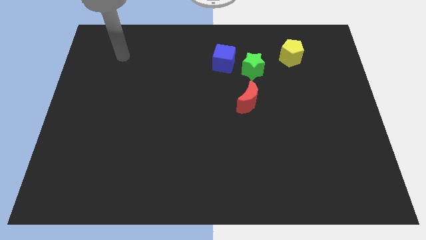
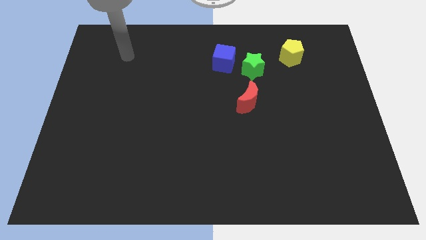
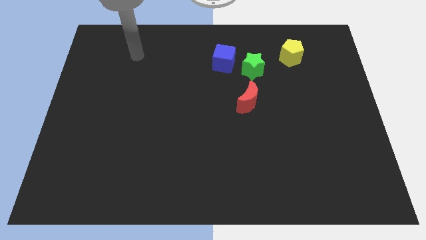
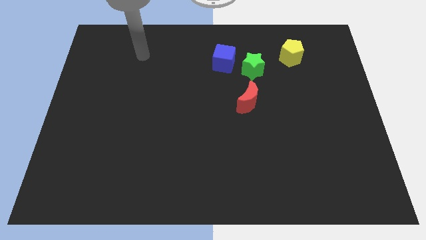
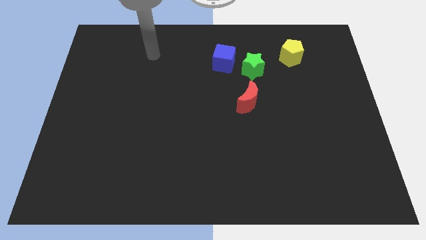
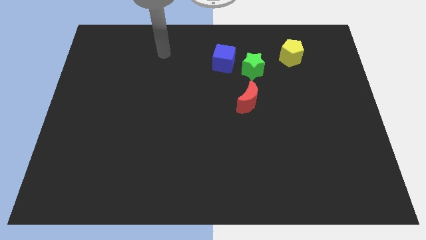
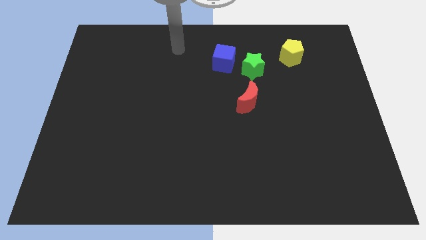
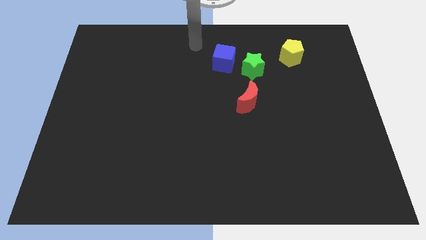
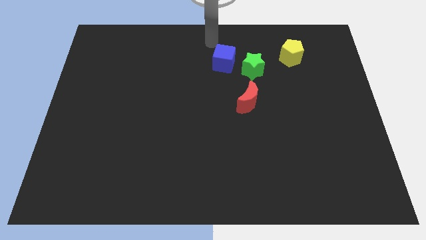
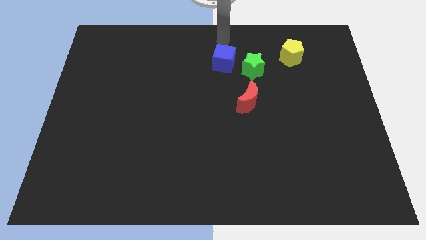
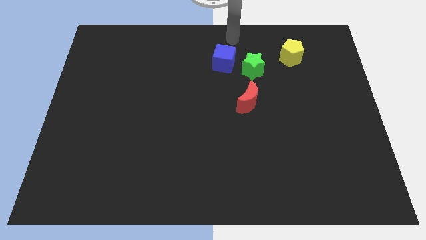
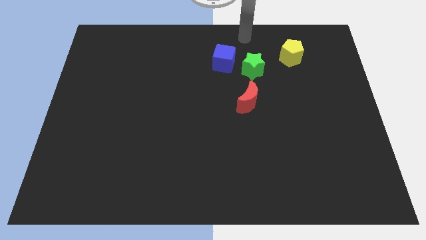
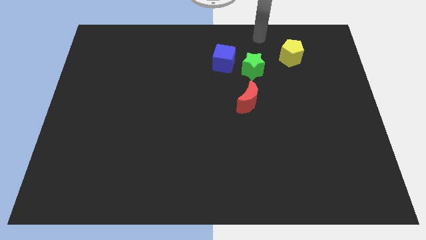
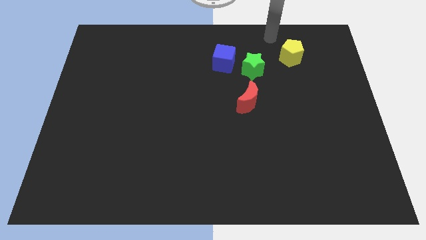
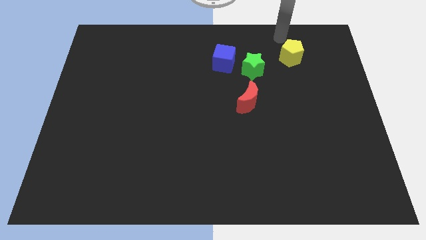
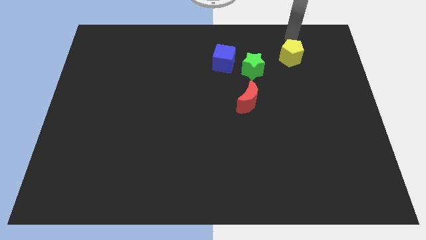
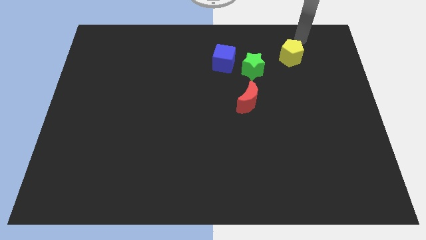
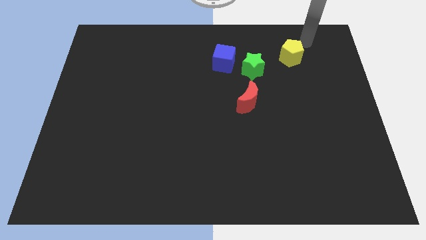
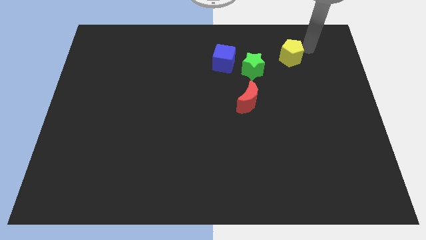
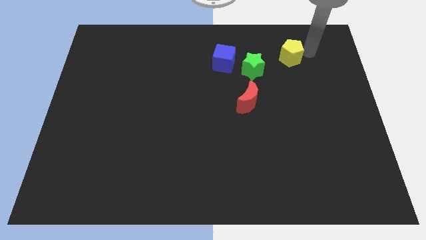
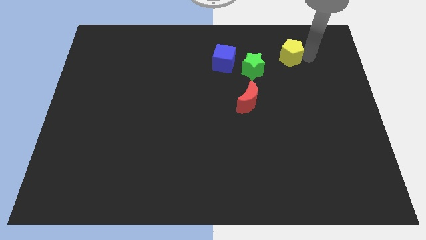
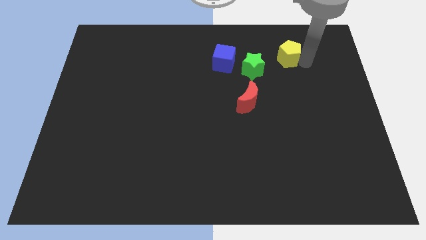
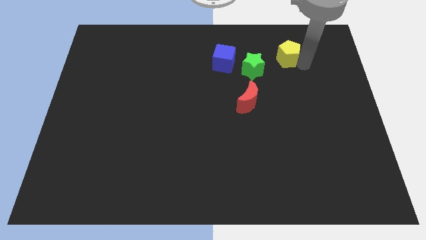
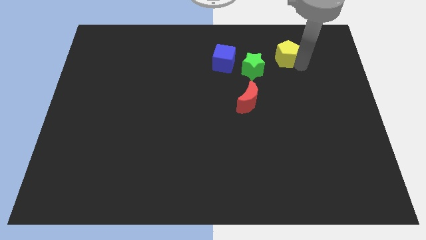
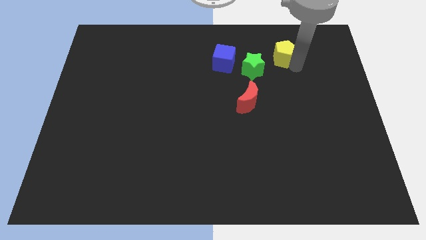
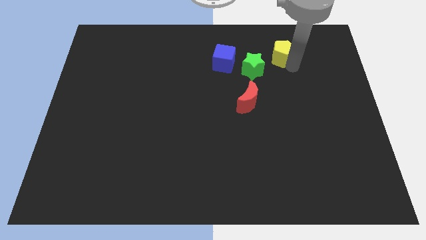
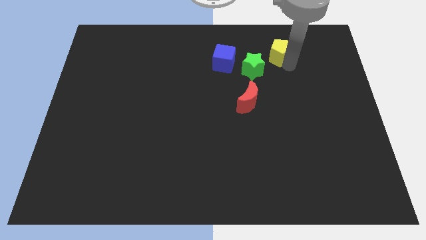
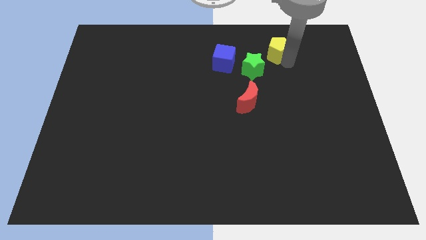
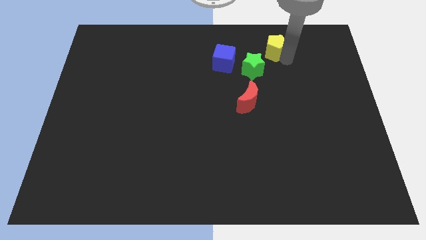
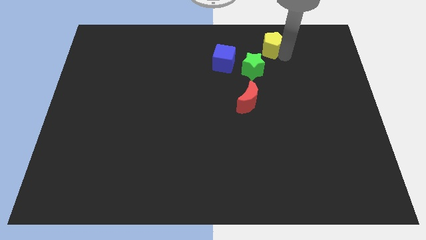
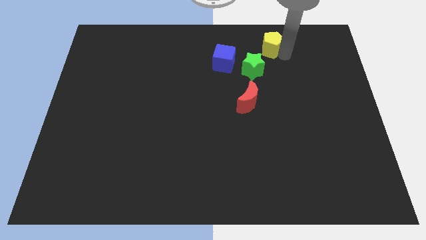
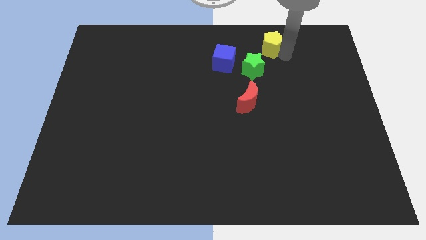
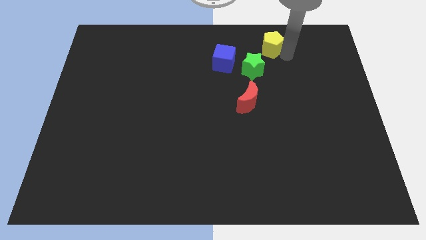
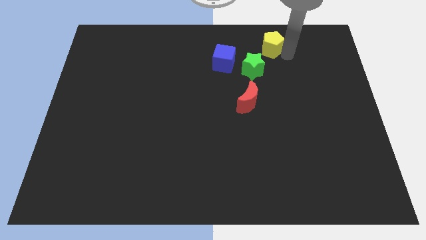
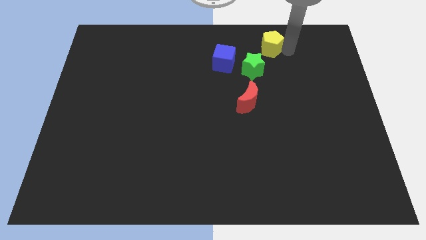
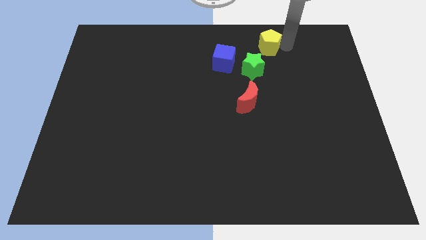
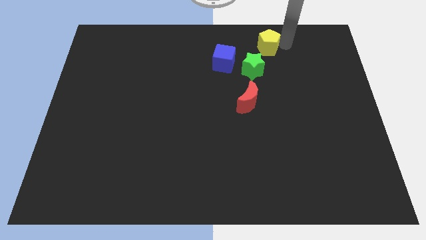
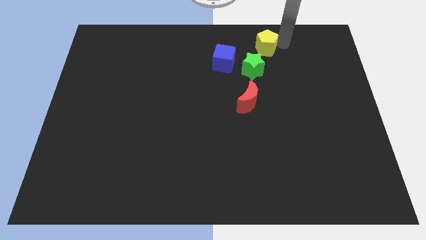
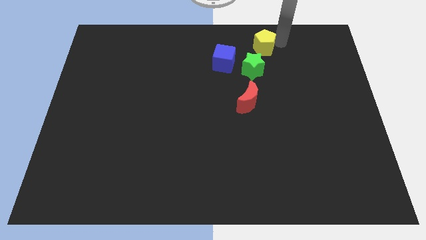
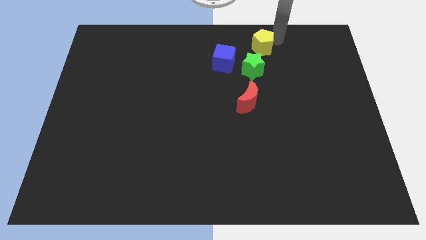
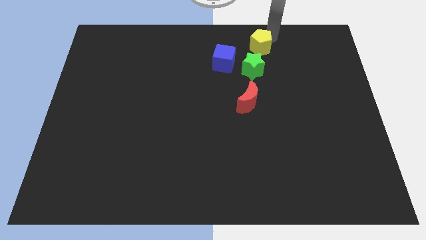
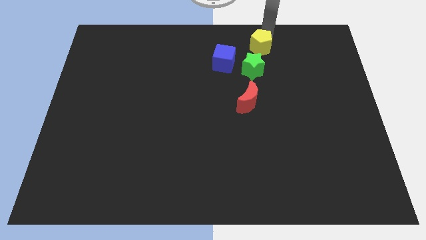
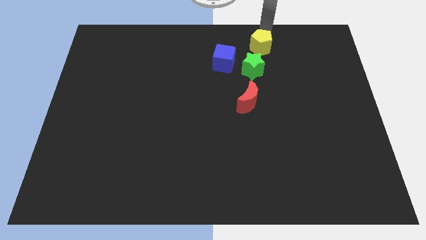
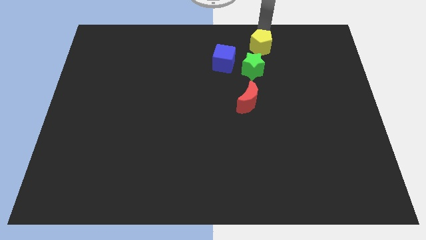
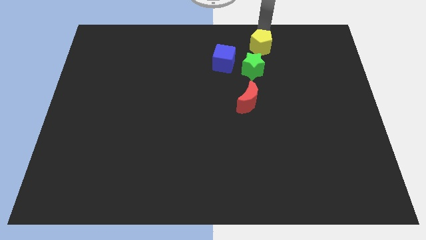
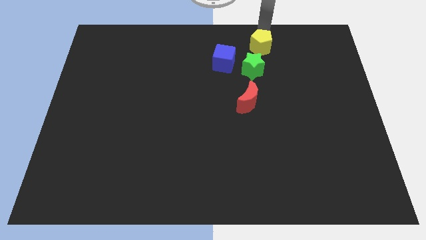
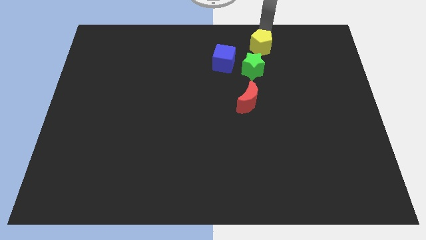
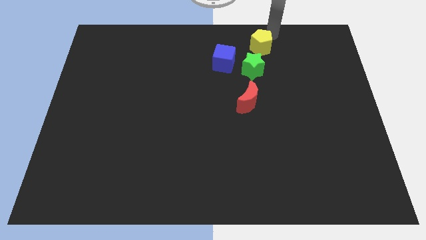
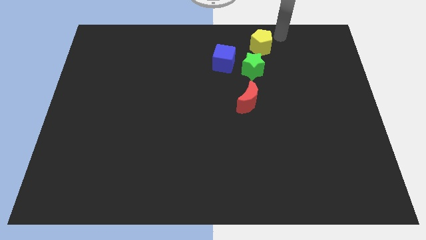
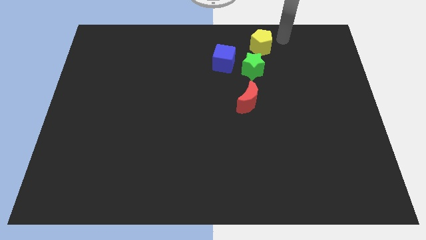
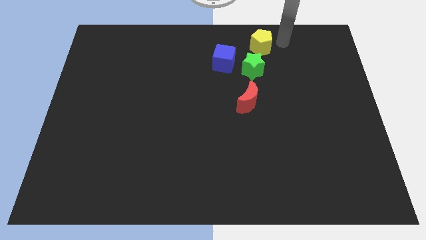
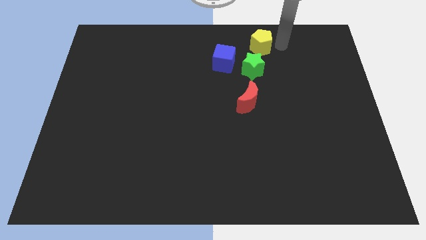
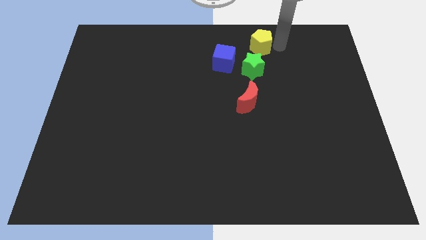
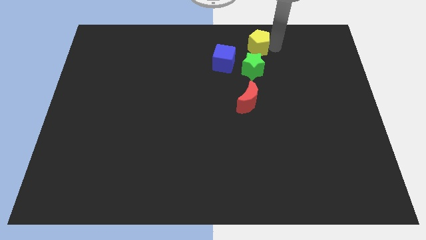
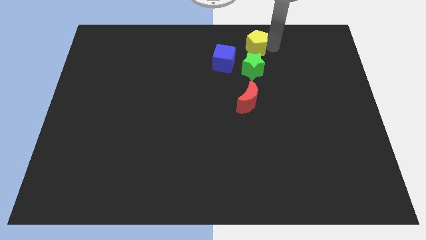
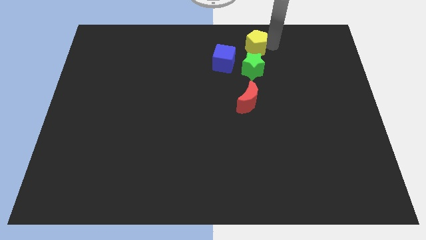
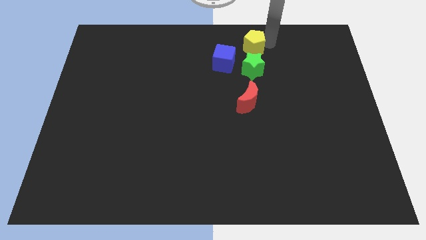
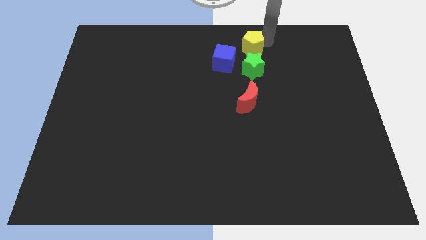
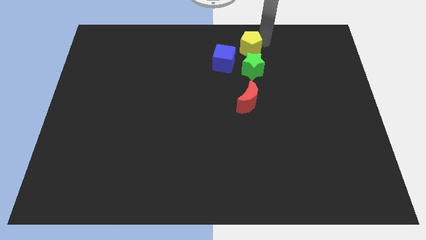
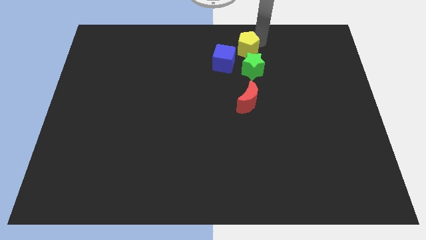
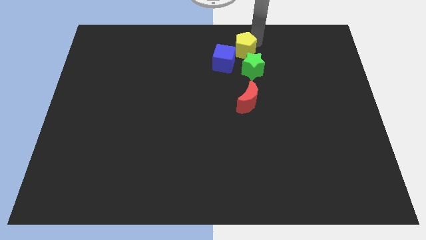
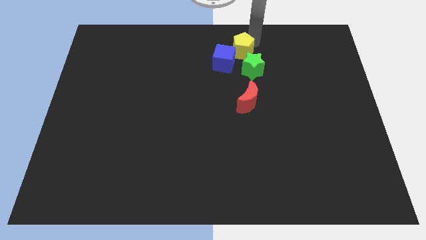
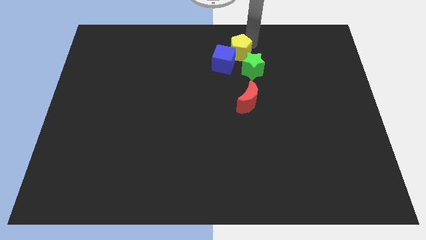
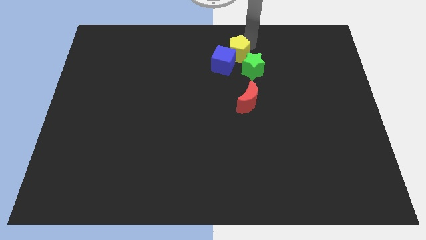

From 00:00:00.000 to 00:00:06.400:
push the yellow pentagon towards the blue cube

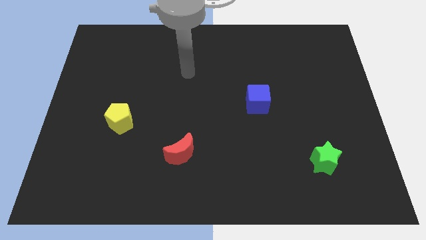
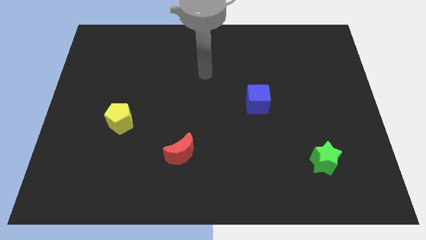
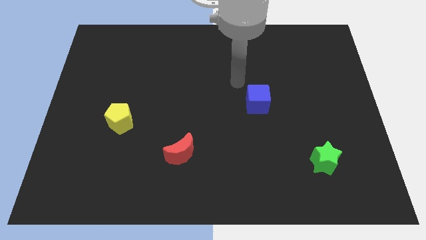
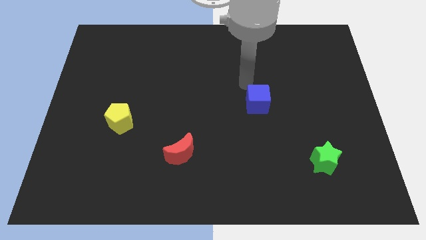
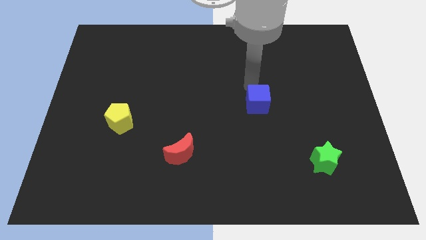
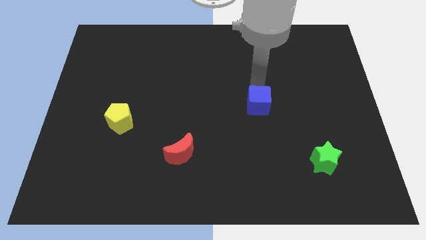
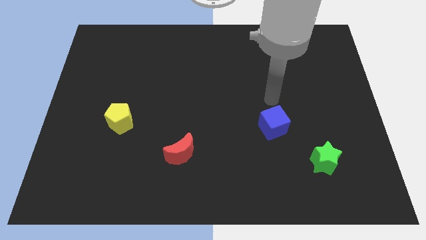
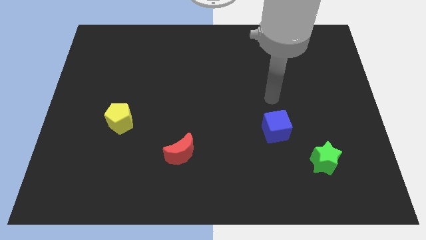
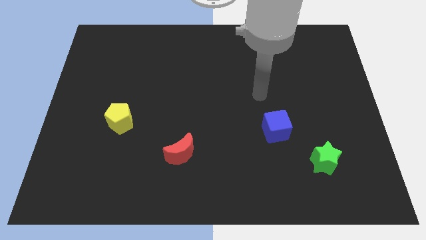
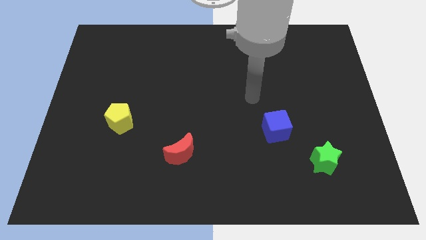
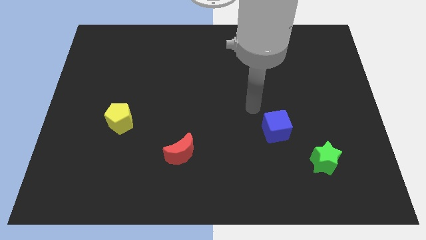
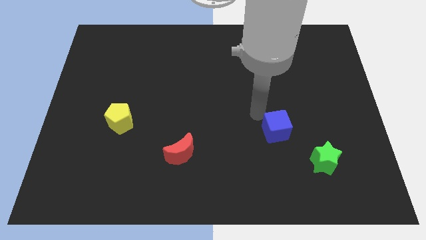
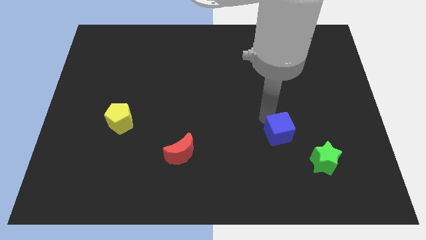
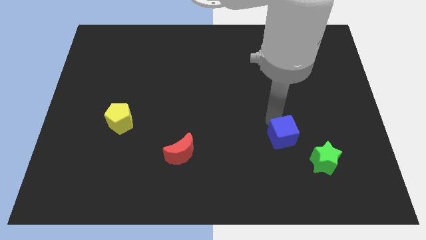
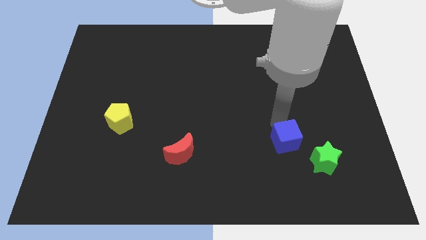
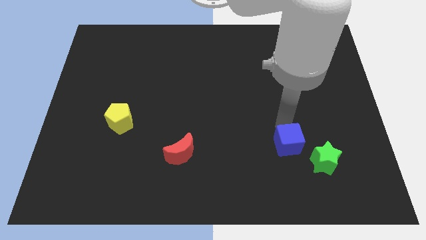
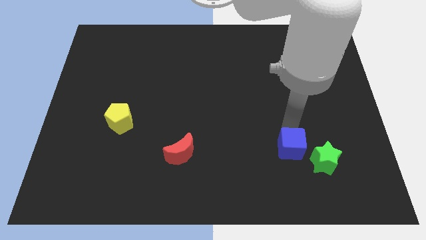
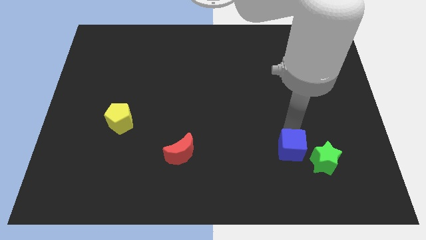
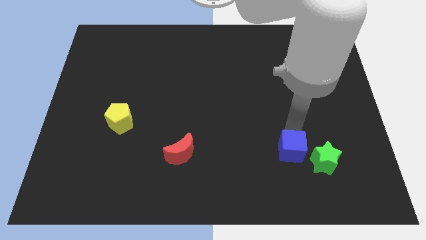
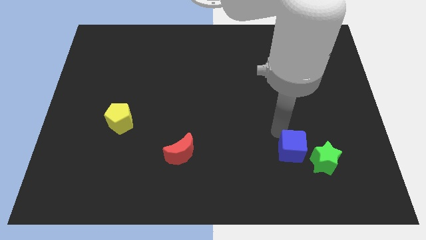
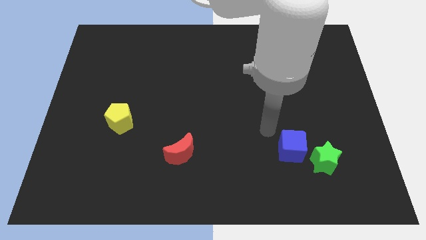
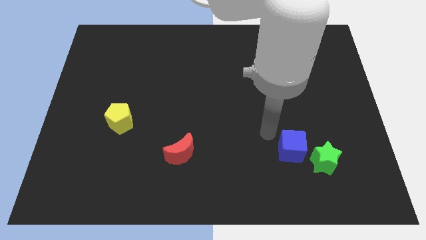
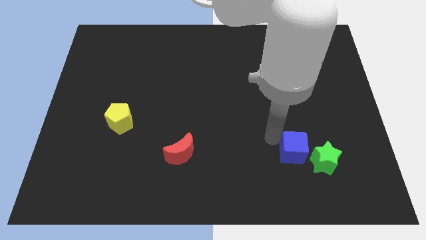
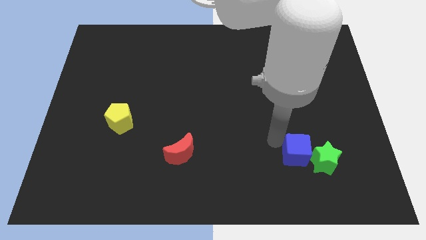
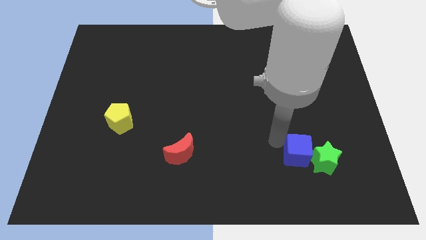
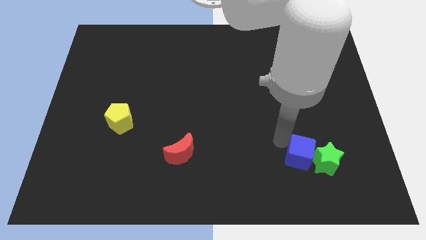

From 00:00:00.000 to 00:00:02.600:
slide the cube to the green star
